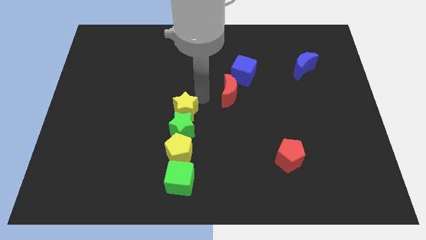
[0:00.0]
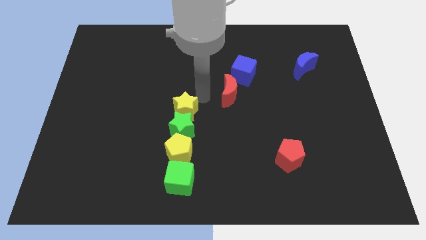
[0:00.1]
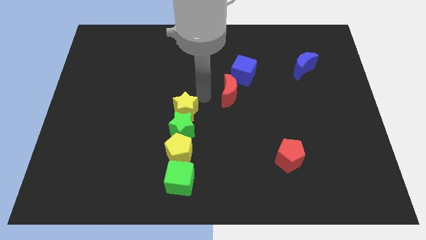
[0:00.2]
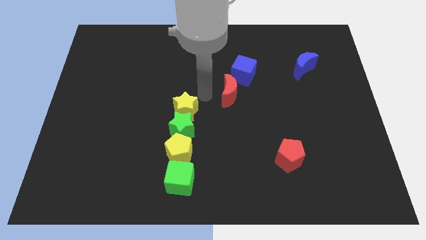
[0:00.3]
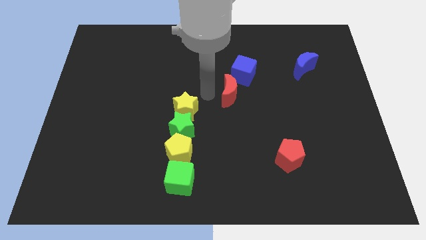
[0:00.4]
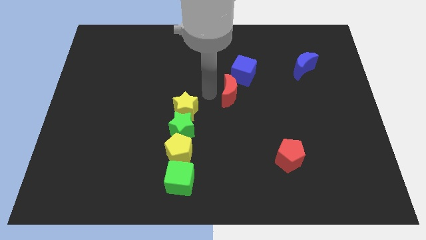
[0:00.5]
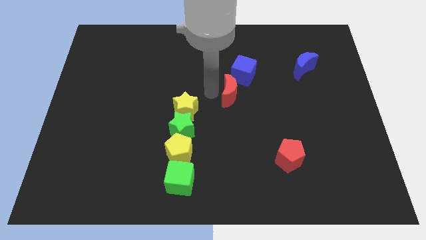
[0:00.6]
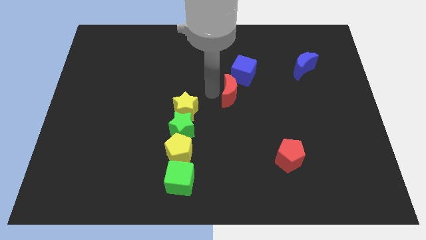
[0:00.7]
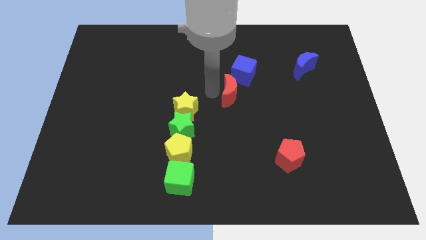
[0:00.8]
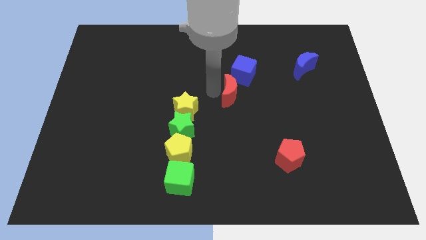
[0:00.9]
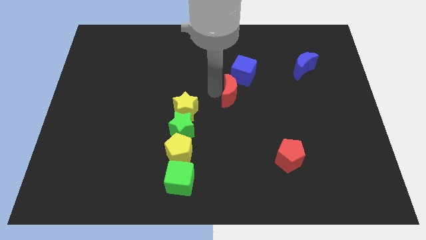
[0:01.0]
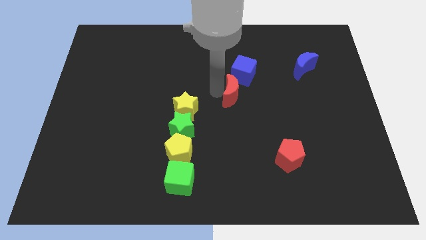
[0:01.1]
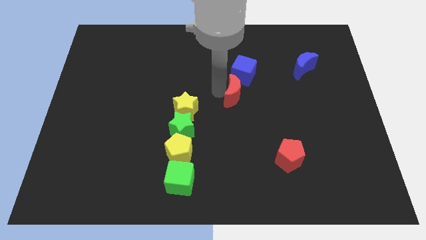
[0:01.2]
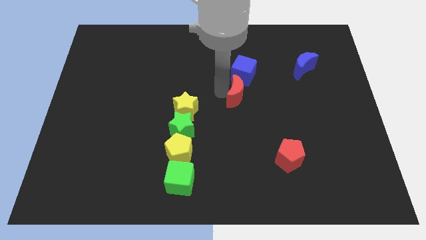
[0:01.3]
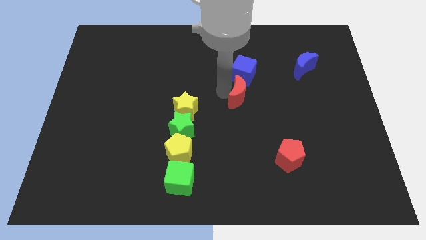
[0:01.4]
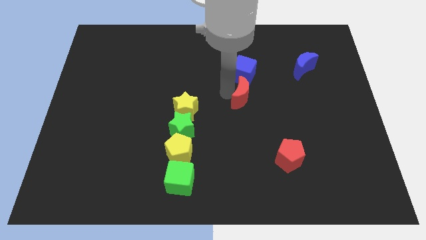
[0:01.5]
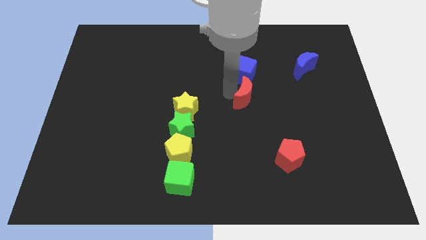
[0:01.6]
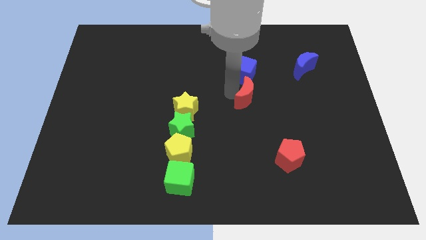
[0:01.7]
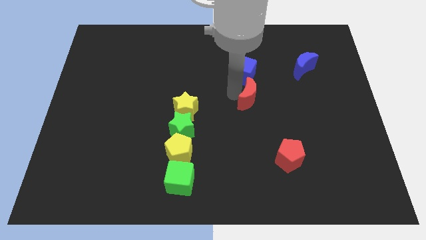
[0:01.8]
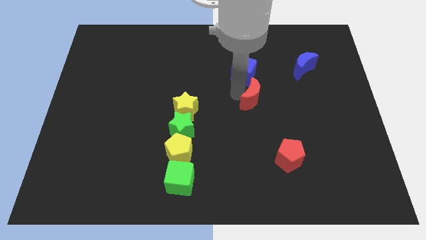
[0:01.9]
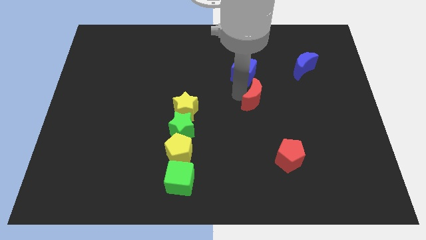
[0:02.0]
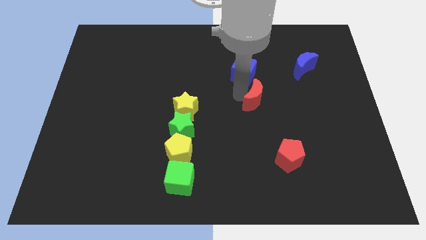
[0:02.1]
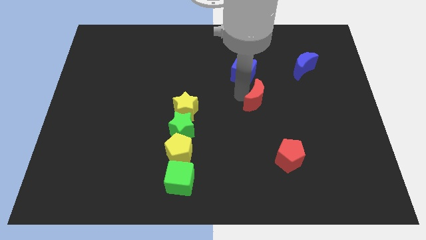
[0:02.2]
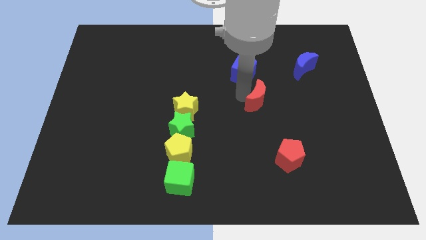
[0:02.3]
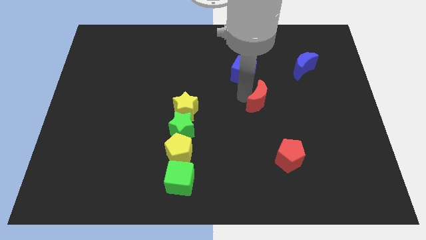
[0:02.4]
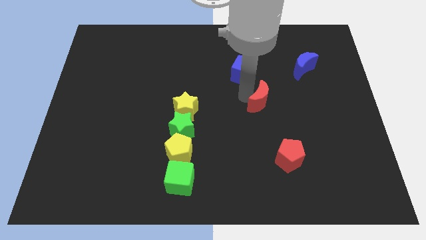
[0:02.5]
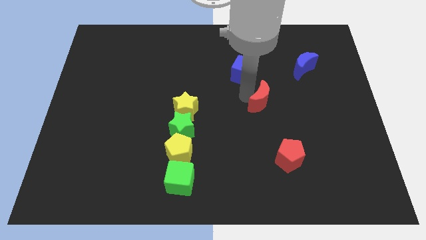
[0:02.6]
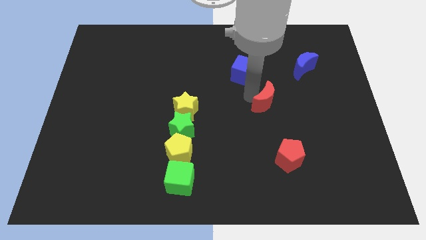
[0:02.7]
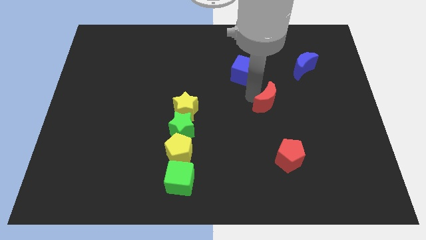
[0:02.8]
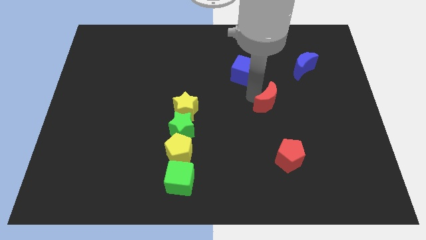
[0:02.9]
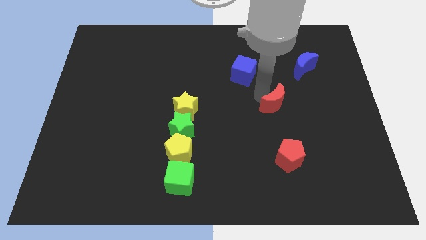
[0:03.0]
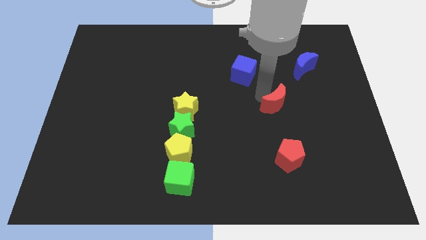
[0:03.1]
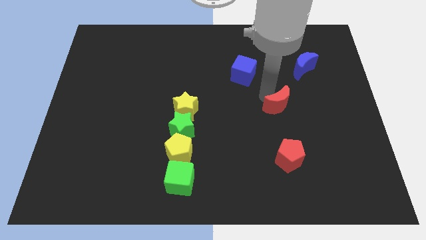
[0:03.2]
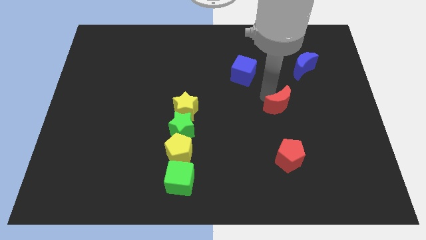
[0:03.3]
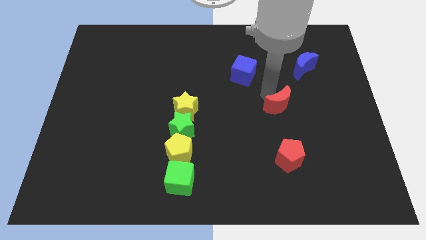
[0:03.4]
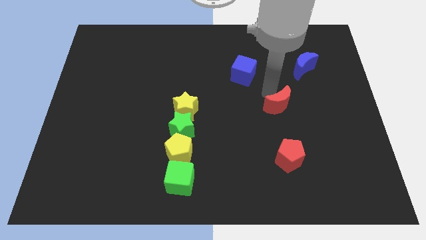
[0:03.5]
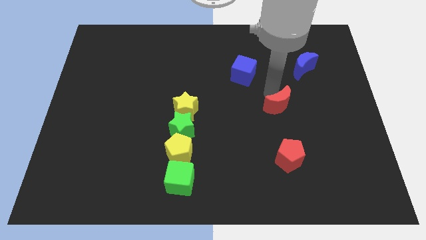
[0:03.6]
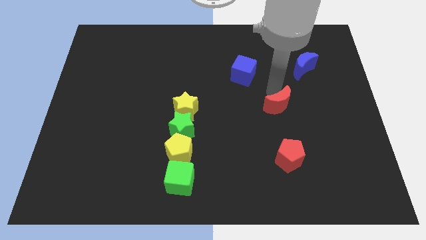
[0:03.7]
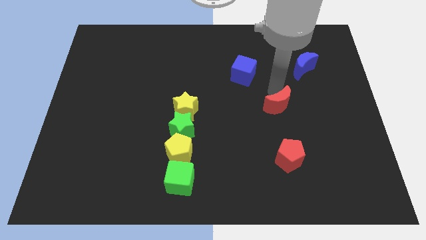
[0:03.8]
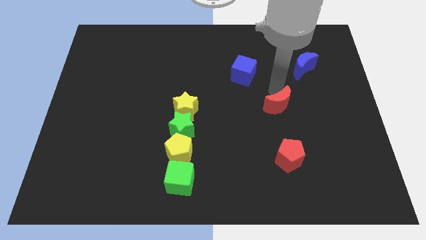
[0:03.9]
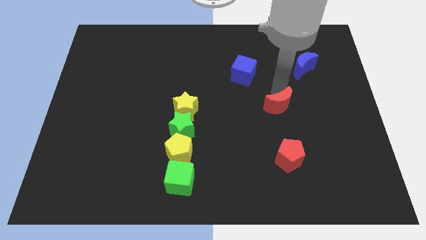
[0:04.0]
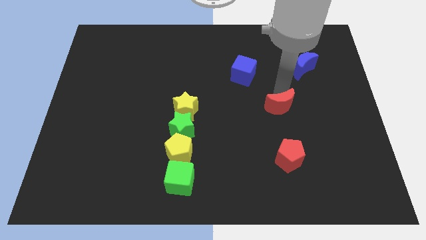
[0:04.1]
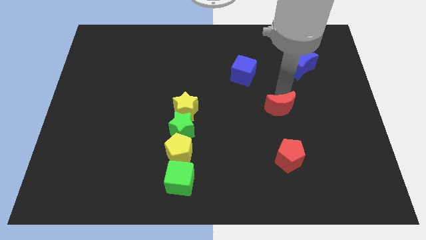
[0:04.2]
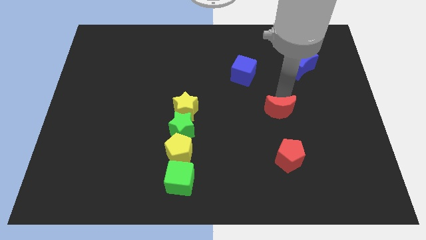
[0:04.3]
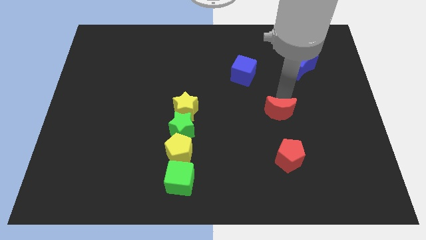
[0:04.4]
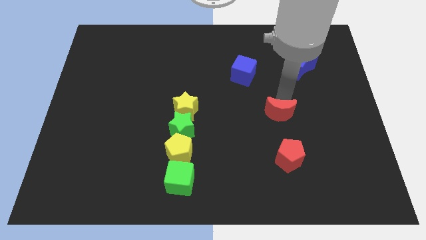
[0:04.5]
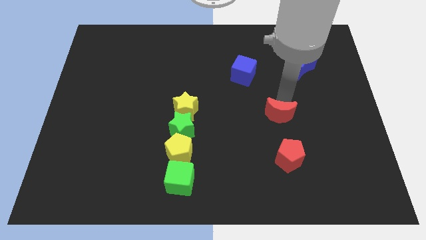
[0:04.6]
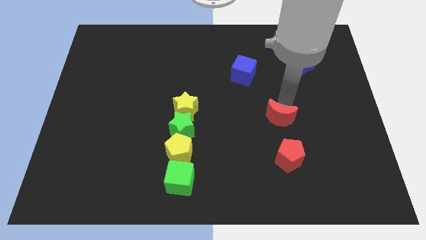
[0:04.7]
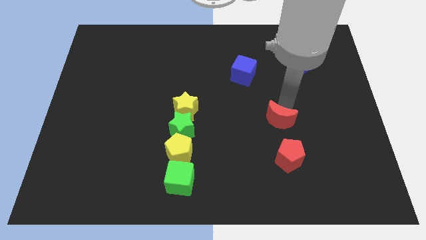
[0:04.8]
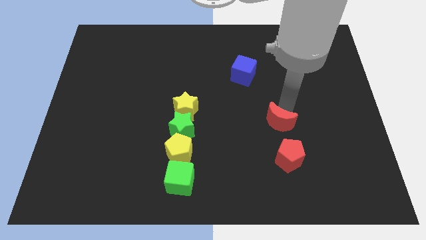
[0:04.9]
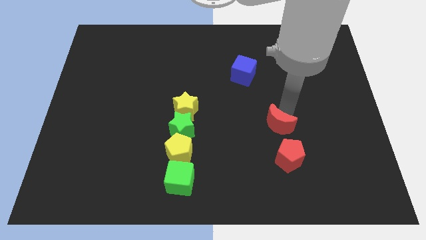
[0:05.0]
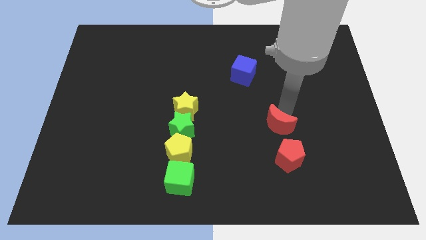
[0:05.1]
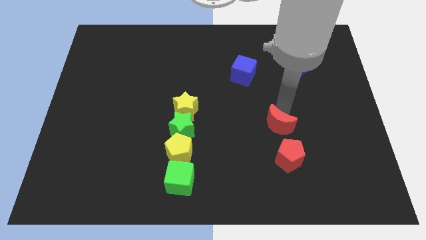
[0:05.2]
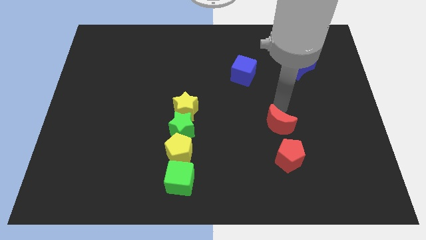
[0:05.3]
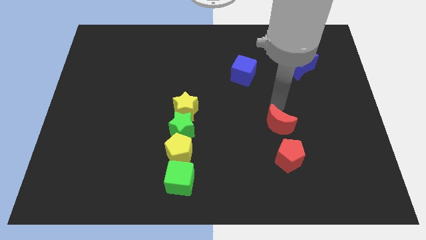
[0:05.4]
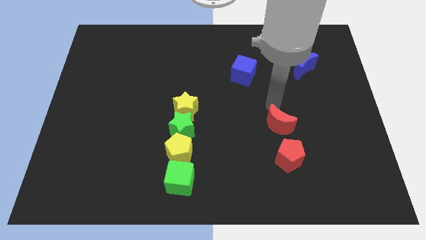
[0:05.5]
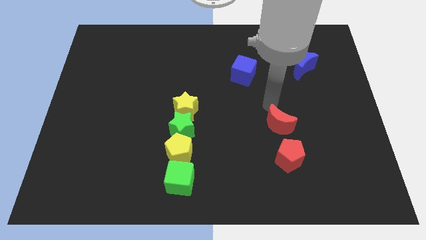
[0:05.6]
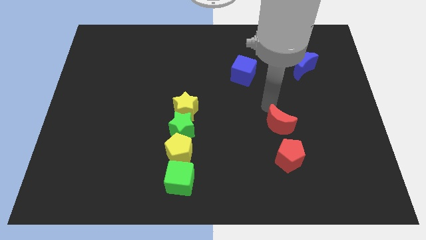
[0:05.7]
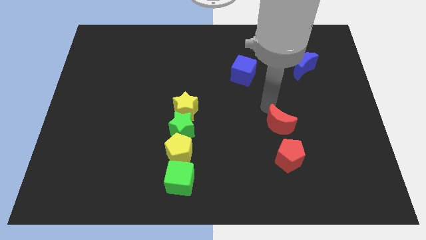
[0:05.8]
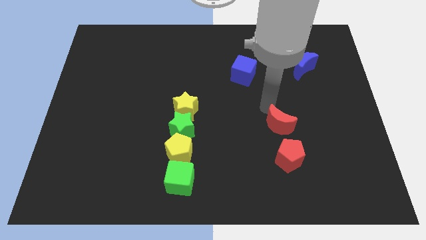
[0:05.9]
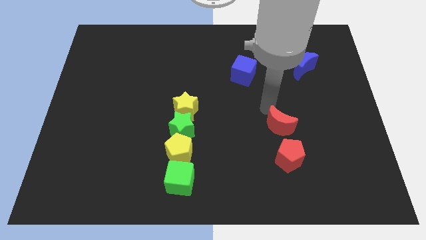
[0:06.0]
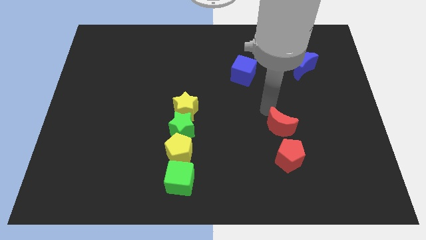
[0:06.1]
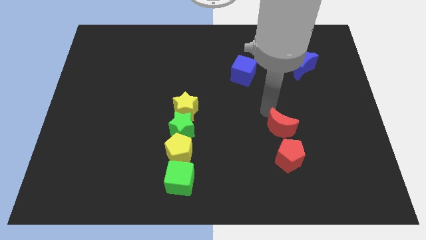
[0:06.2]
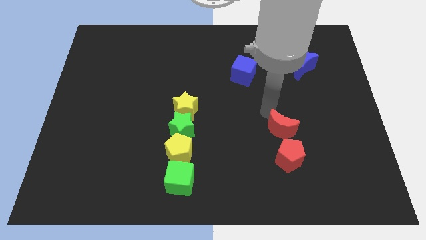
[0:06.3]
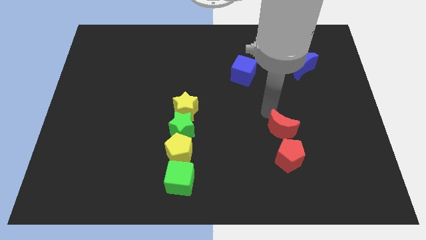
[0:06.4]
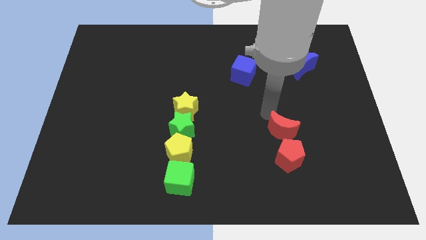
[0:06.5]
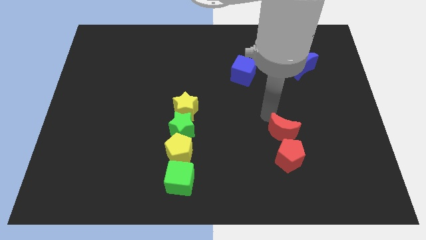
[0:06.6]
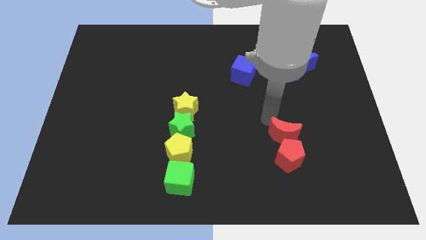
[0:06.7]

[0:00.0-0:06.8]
push the red crescent to the top of the red pentagon

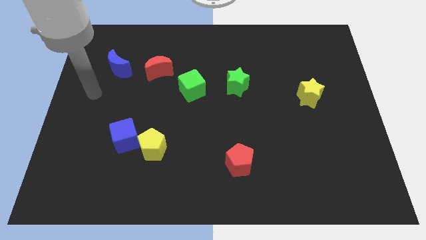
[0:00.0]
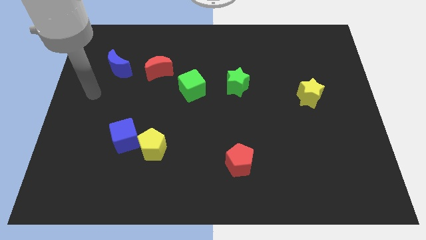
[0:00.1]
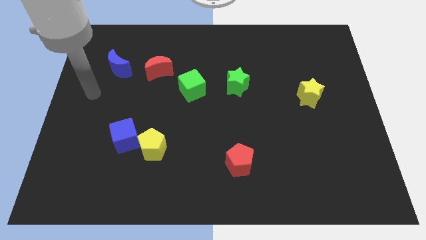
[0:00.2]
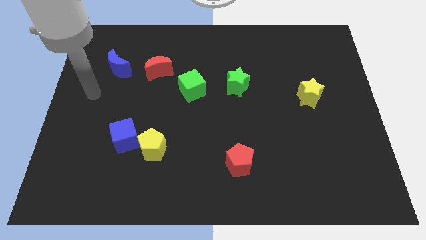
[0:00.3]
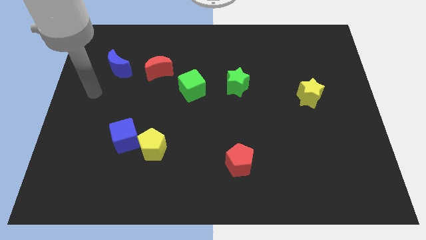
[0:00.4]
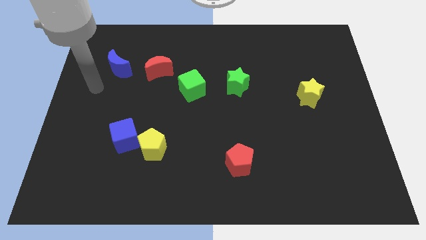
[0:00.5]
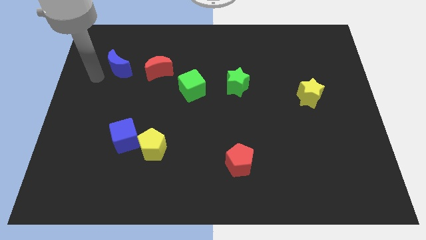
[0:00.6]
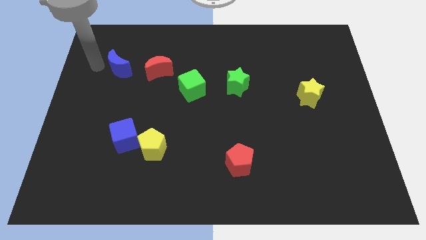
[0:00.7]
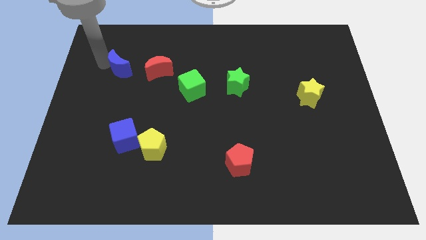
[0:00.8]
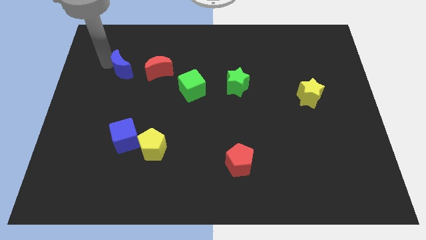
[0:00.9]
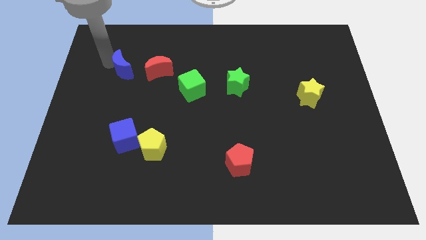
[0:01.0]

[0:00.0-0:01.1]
tap your arm on top left of blue moon

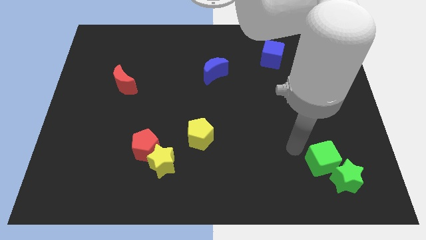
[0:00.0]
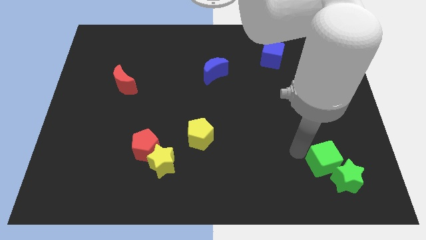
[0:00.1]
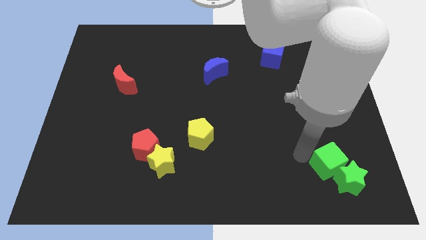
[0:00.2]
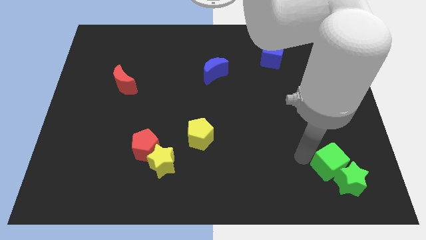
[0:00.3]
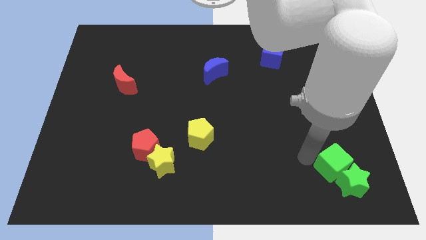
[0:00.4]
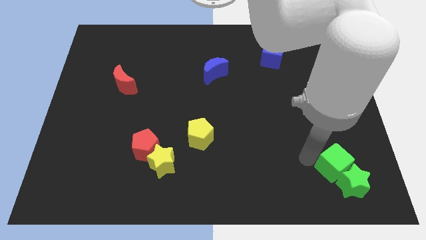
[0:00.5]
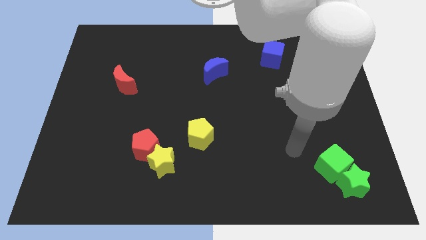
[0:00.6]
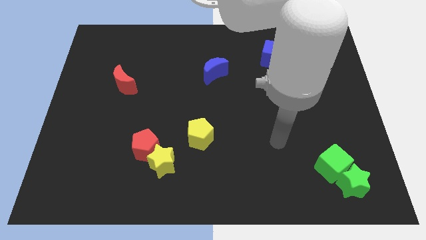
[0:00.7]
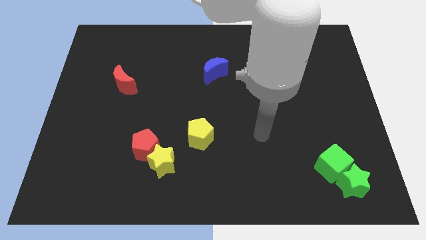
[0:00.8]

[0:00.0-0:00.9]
push the green cube into the green star

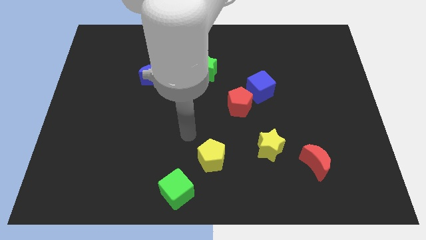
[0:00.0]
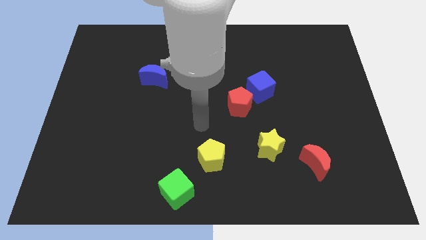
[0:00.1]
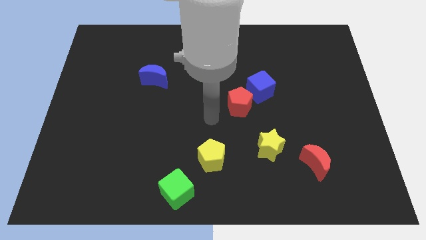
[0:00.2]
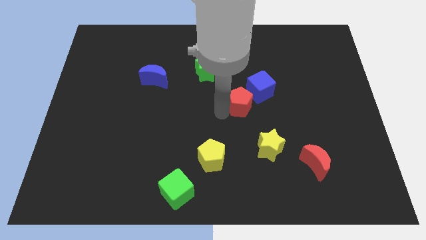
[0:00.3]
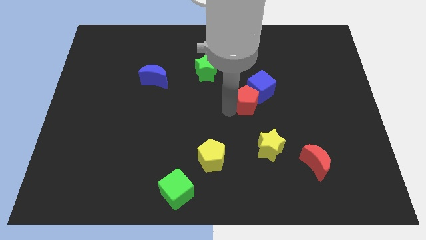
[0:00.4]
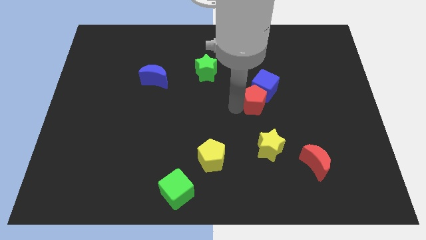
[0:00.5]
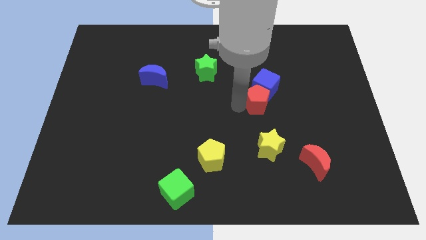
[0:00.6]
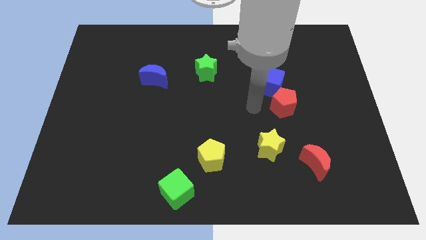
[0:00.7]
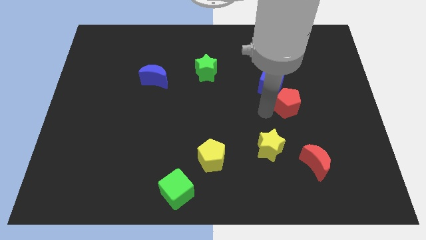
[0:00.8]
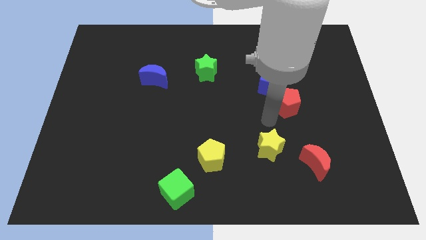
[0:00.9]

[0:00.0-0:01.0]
move the red pentagon diagonally bottom right to the blue cube
